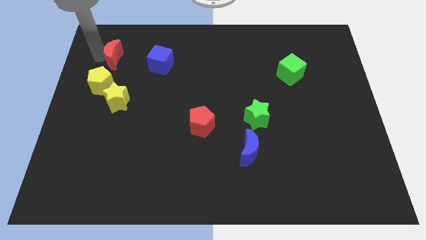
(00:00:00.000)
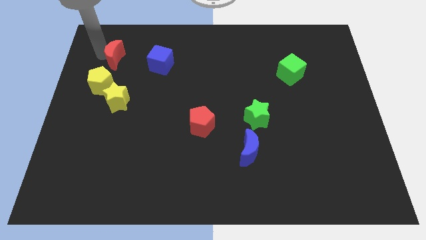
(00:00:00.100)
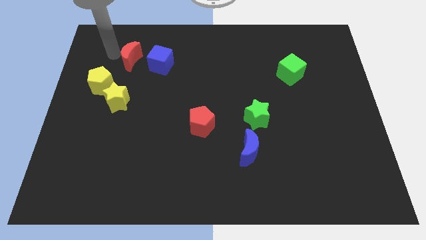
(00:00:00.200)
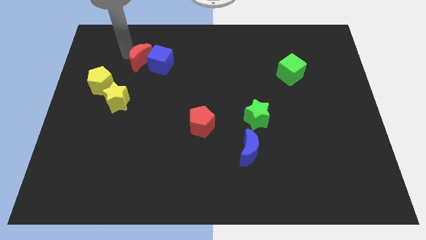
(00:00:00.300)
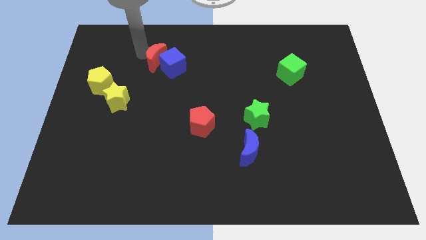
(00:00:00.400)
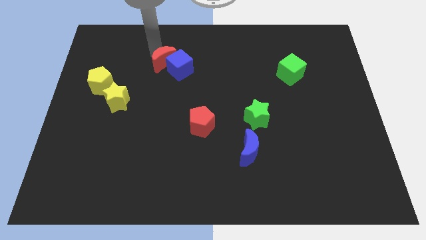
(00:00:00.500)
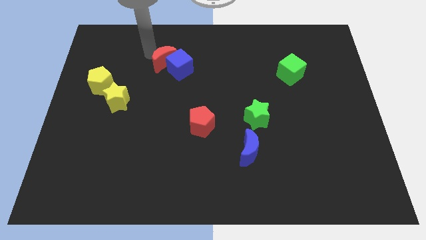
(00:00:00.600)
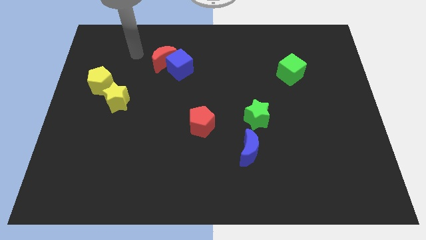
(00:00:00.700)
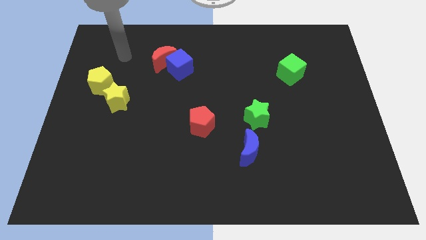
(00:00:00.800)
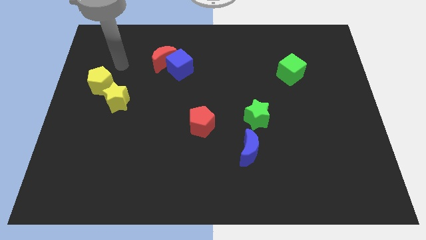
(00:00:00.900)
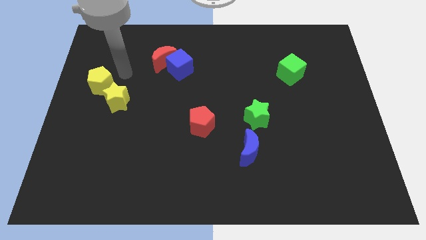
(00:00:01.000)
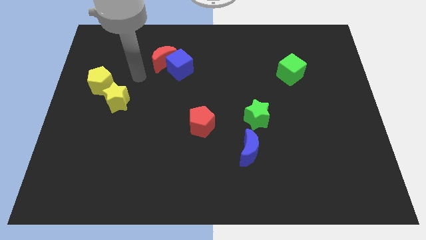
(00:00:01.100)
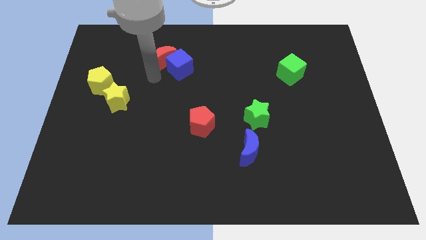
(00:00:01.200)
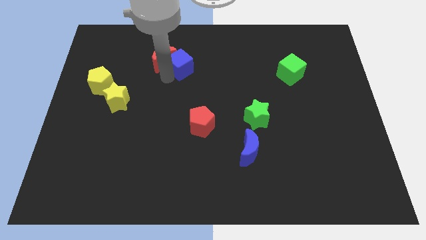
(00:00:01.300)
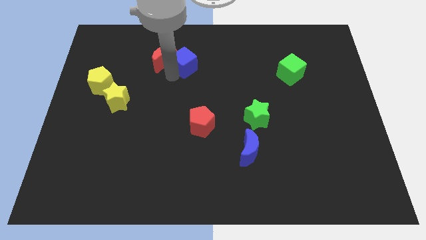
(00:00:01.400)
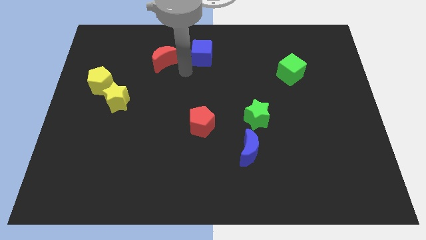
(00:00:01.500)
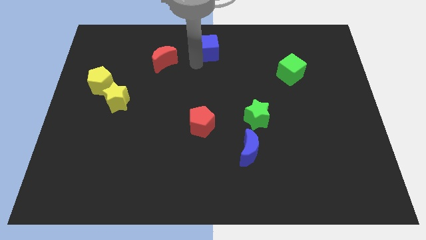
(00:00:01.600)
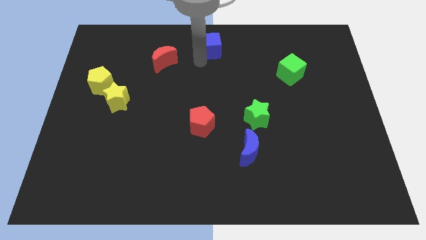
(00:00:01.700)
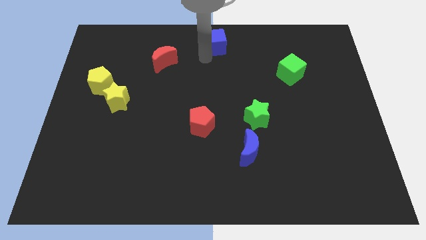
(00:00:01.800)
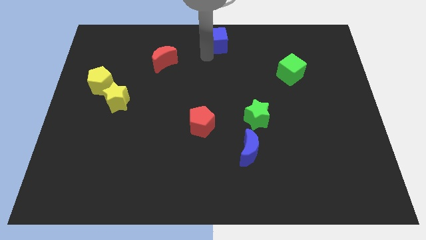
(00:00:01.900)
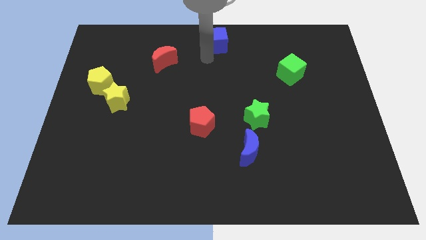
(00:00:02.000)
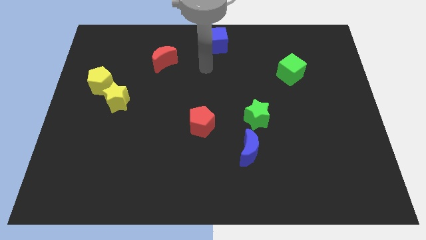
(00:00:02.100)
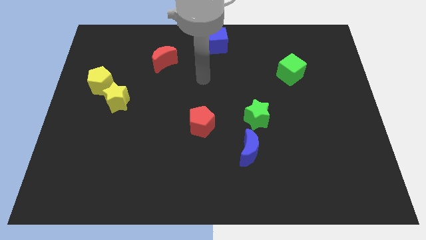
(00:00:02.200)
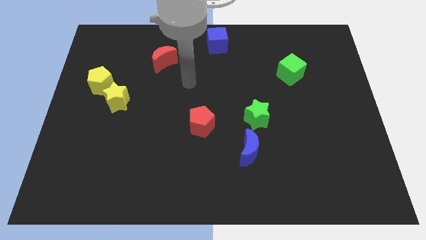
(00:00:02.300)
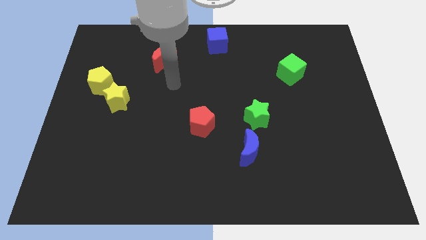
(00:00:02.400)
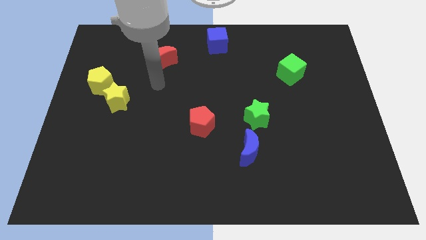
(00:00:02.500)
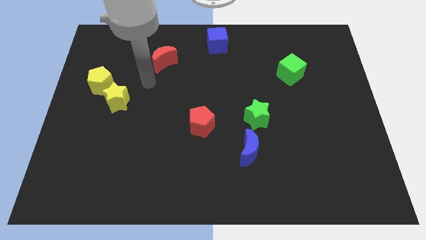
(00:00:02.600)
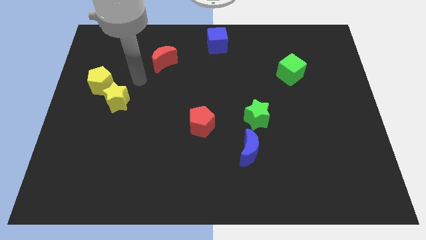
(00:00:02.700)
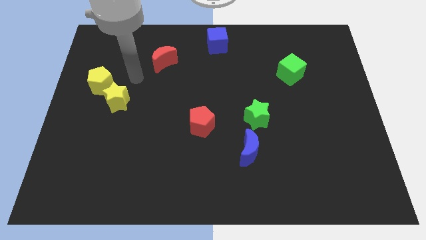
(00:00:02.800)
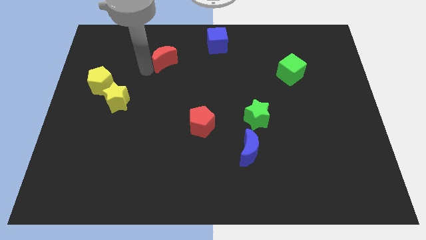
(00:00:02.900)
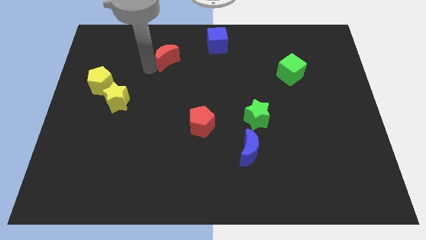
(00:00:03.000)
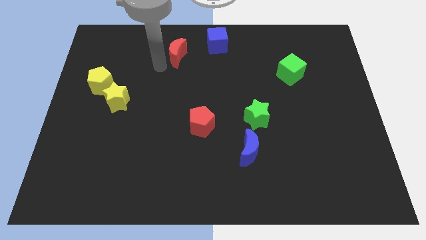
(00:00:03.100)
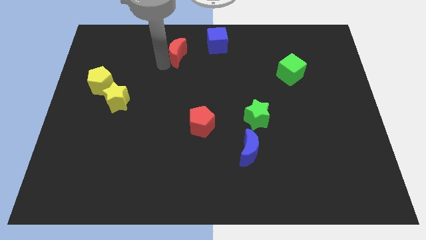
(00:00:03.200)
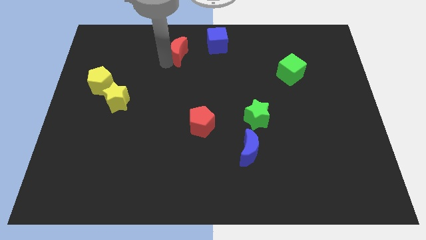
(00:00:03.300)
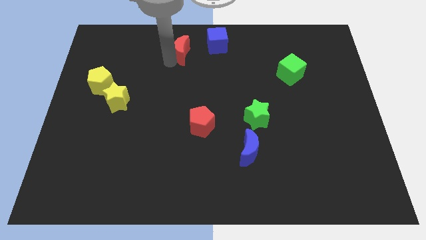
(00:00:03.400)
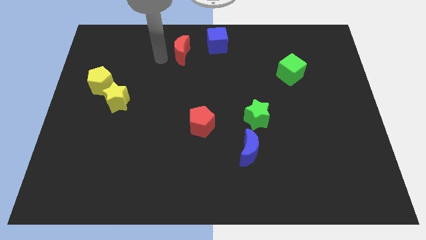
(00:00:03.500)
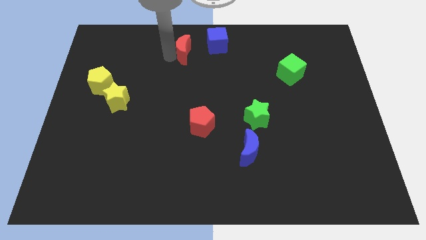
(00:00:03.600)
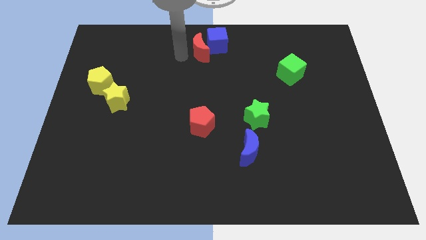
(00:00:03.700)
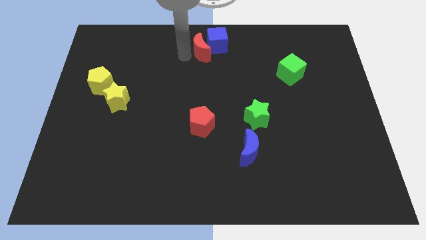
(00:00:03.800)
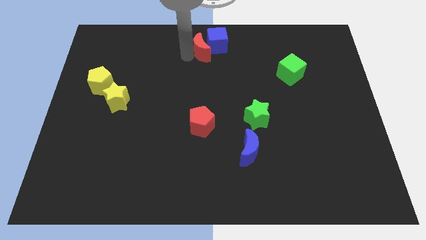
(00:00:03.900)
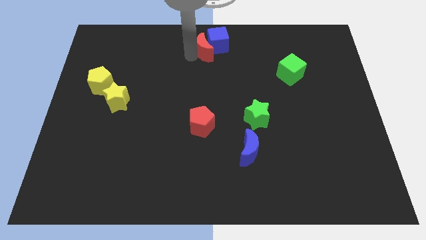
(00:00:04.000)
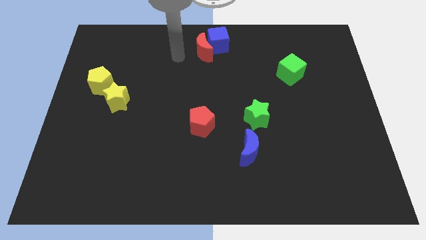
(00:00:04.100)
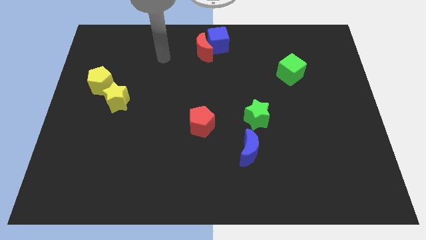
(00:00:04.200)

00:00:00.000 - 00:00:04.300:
push the red crescent into the blue cube

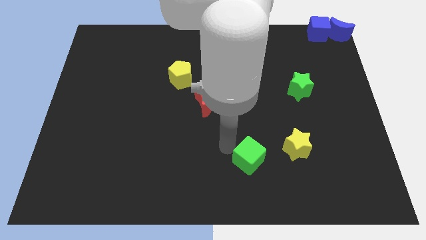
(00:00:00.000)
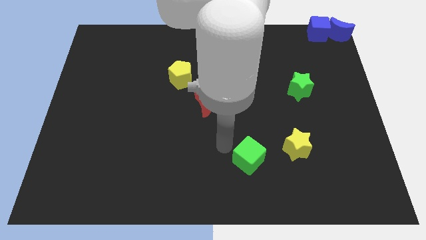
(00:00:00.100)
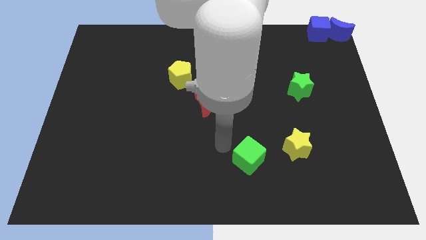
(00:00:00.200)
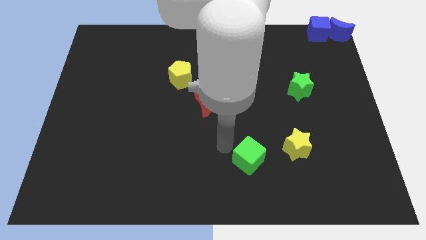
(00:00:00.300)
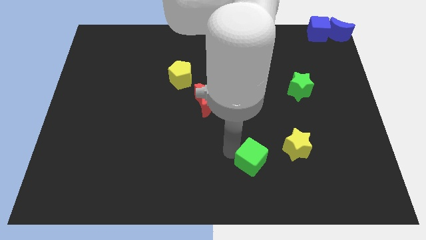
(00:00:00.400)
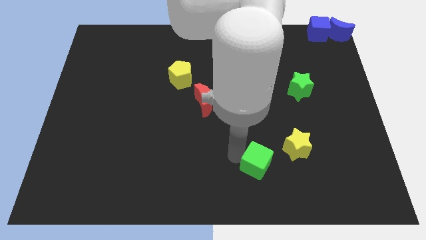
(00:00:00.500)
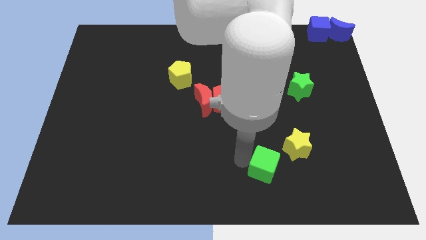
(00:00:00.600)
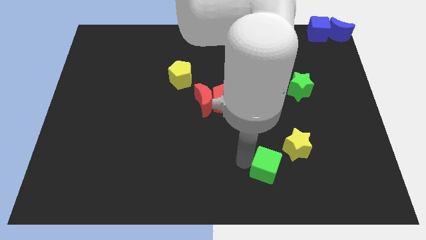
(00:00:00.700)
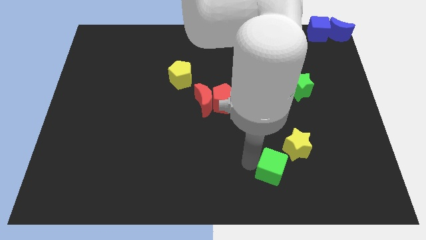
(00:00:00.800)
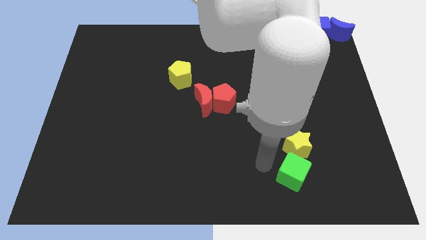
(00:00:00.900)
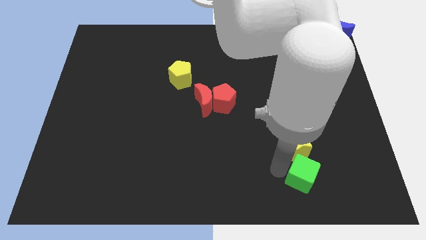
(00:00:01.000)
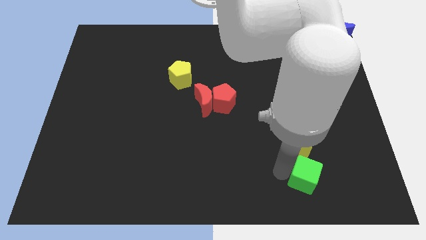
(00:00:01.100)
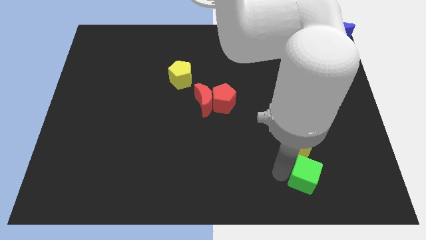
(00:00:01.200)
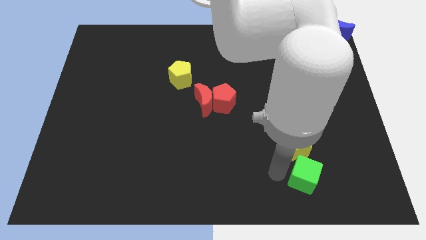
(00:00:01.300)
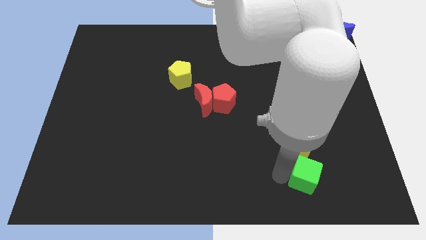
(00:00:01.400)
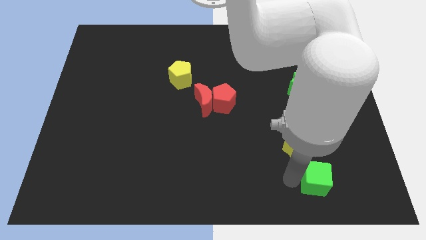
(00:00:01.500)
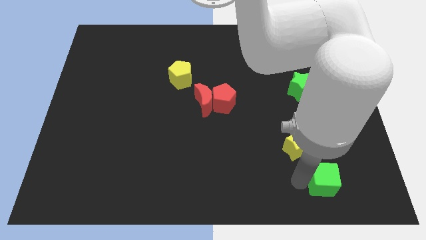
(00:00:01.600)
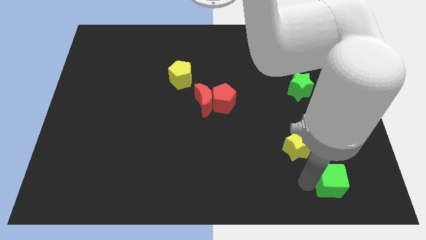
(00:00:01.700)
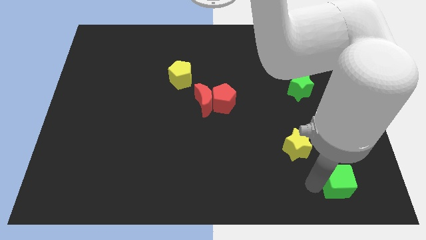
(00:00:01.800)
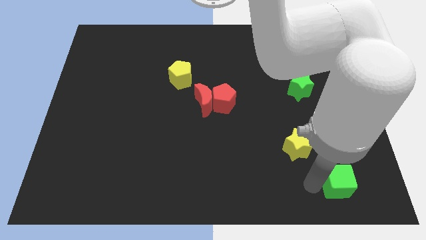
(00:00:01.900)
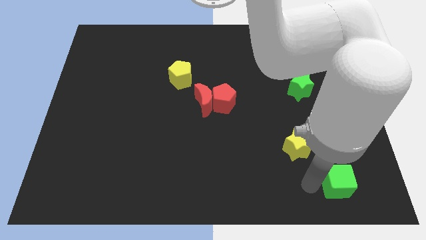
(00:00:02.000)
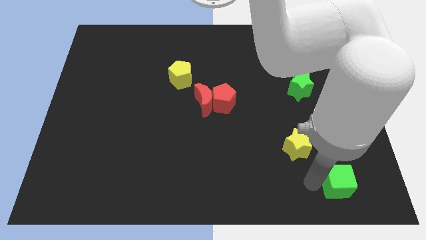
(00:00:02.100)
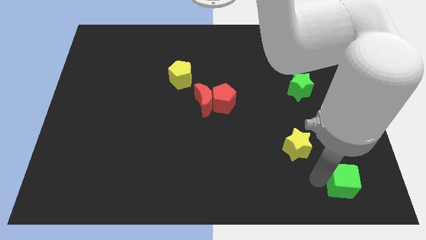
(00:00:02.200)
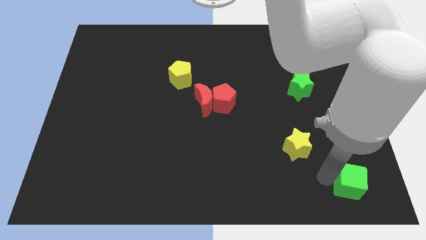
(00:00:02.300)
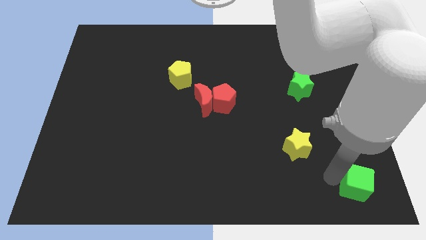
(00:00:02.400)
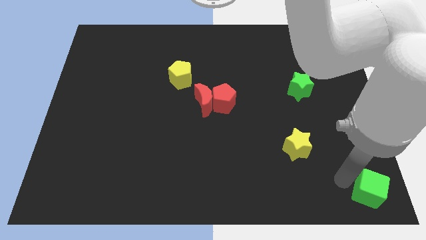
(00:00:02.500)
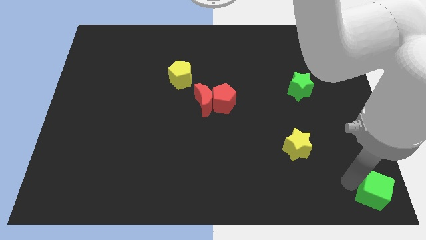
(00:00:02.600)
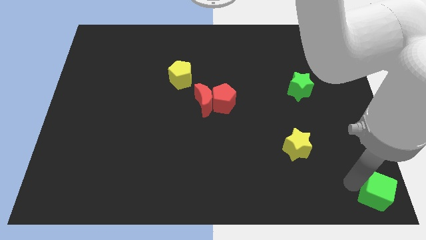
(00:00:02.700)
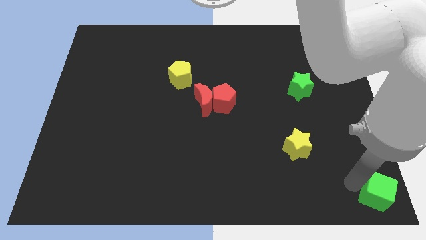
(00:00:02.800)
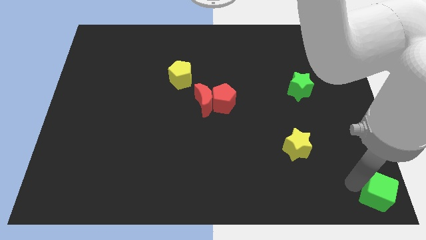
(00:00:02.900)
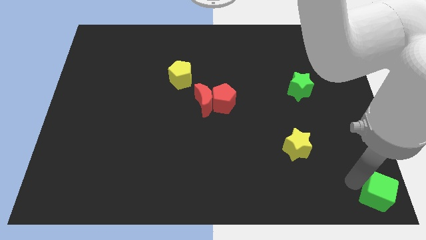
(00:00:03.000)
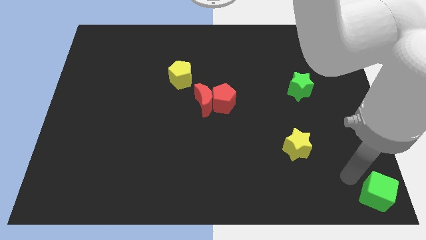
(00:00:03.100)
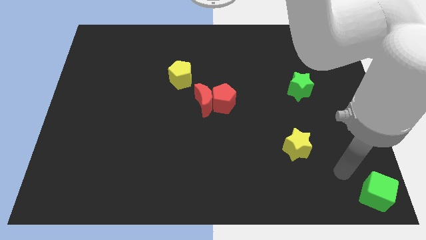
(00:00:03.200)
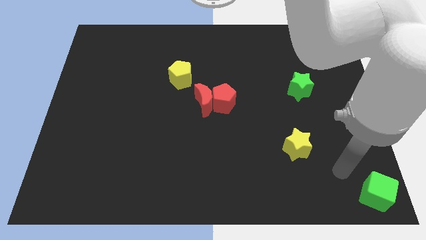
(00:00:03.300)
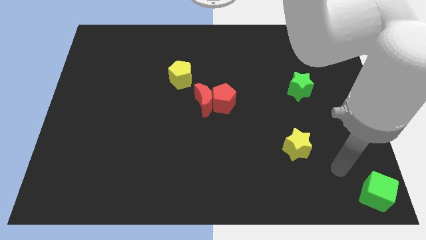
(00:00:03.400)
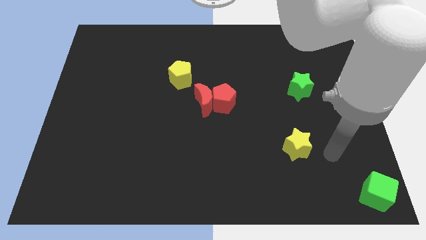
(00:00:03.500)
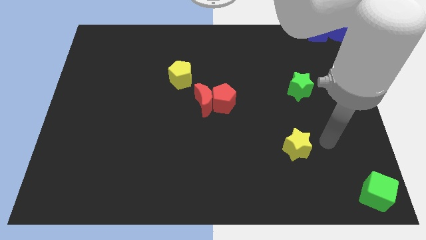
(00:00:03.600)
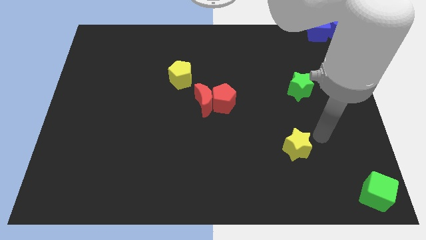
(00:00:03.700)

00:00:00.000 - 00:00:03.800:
push the green cube to the bottom right corner of the board

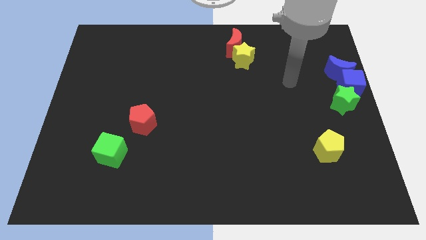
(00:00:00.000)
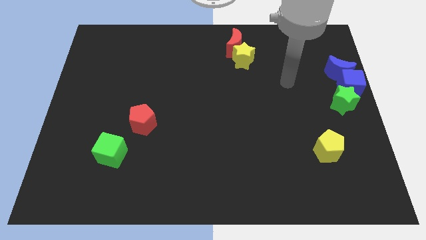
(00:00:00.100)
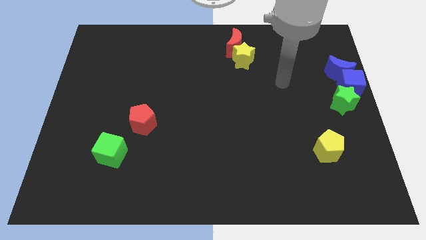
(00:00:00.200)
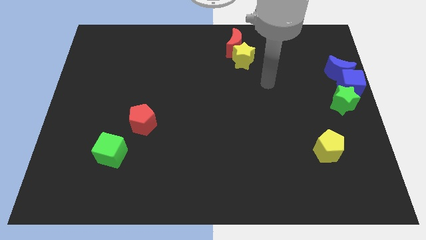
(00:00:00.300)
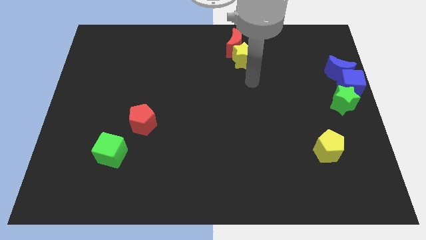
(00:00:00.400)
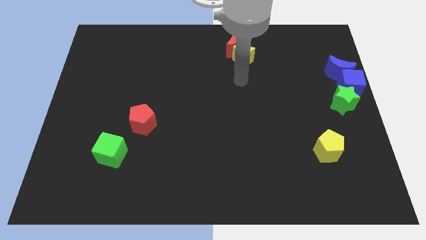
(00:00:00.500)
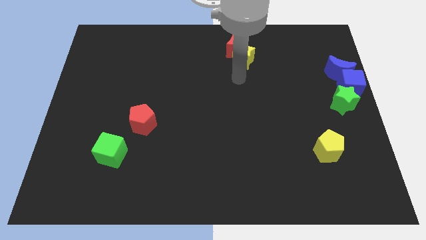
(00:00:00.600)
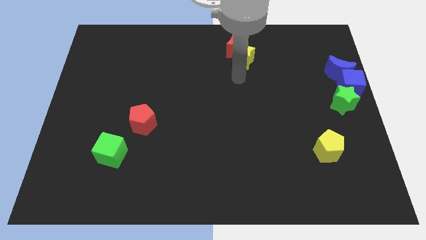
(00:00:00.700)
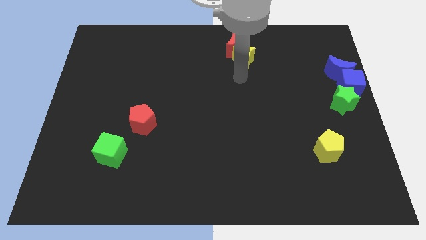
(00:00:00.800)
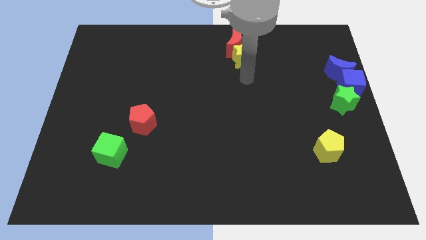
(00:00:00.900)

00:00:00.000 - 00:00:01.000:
point your arm at the bottom of yellow star
